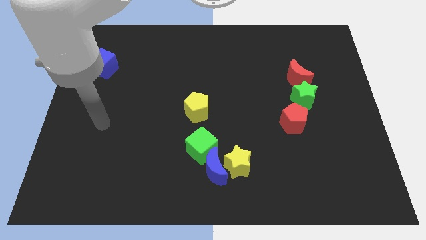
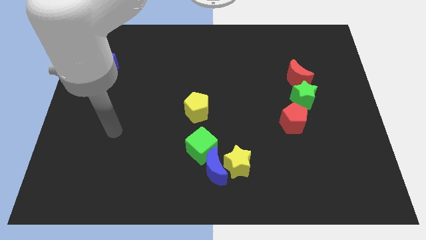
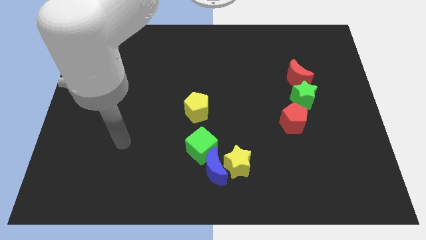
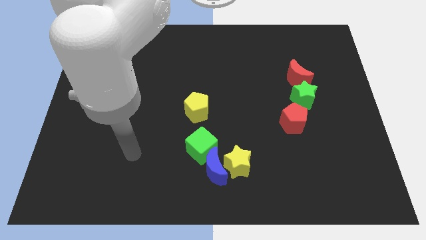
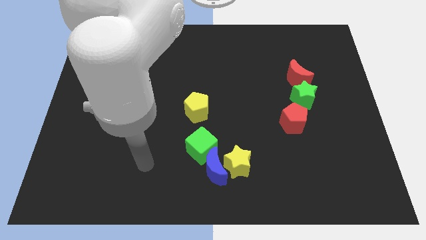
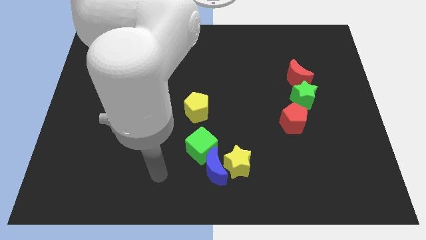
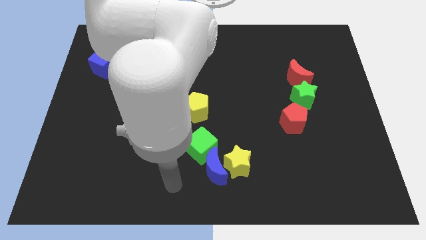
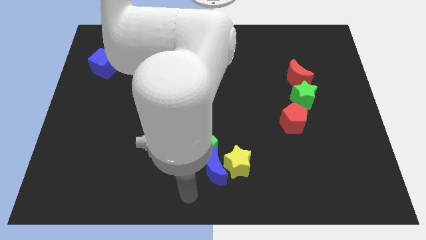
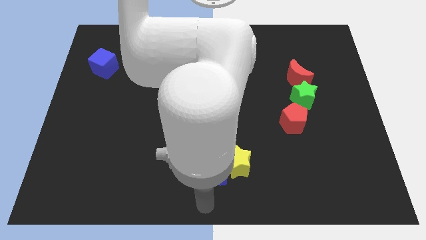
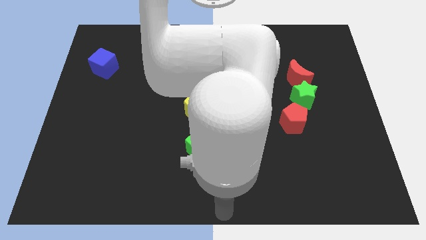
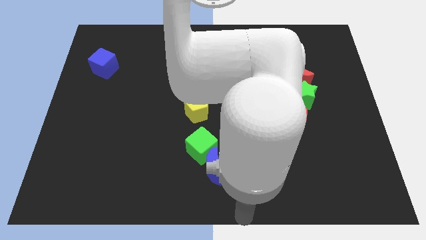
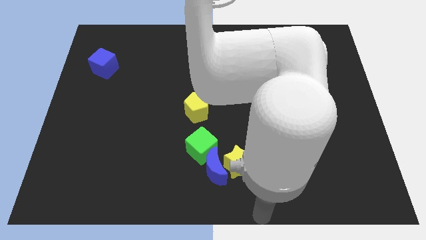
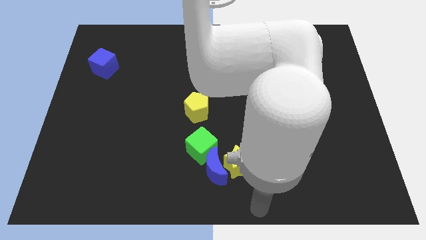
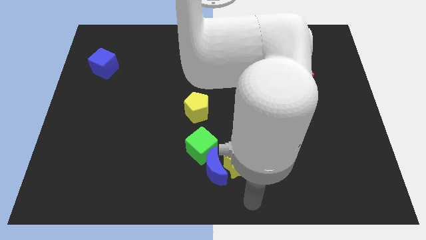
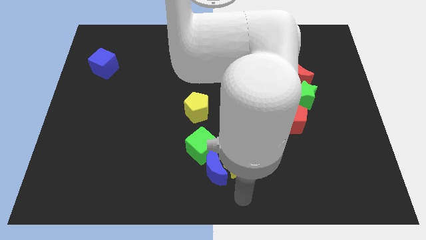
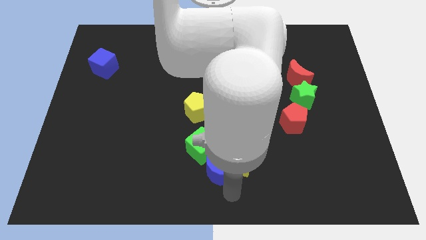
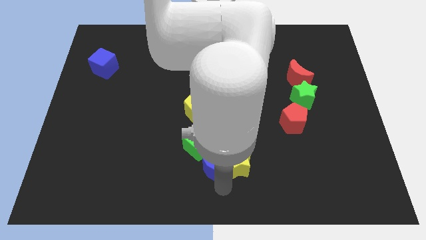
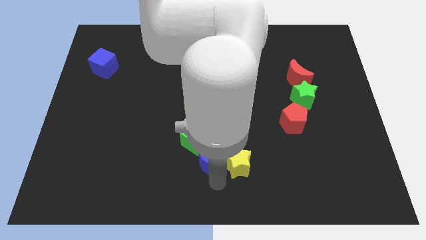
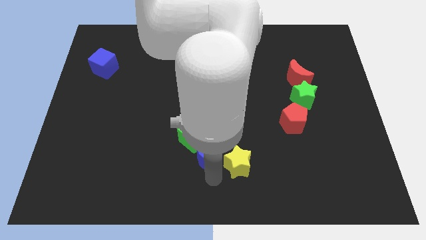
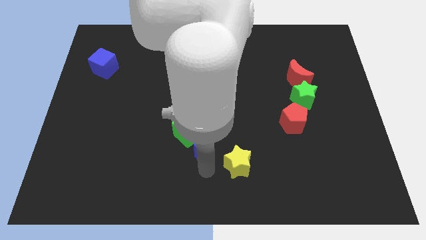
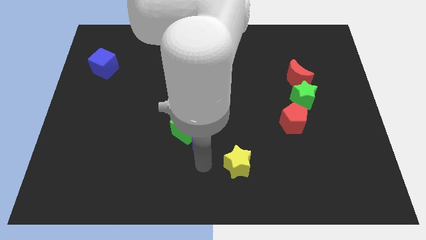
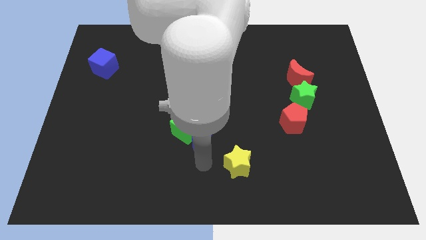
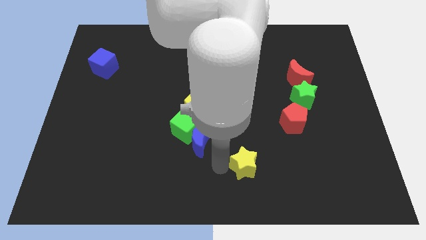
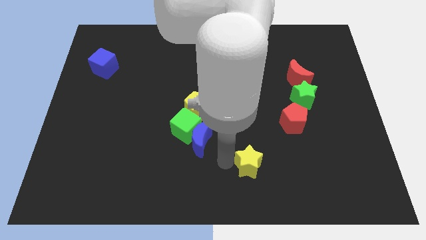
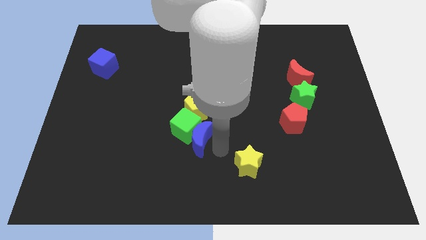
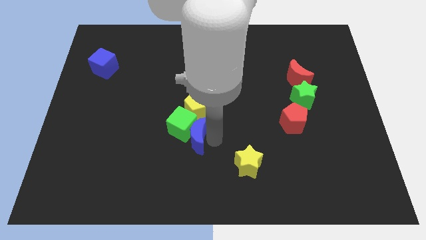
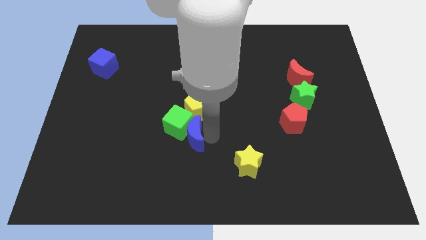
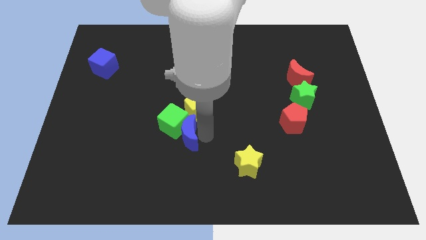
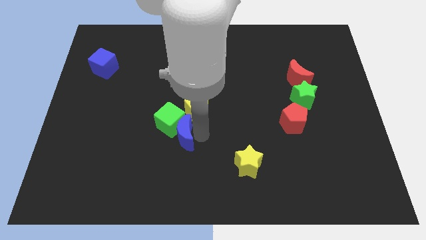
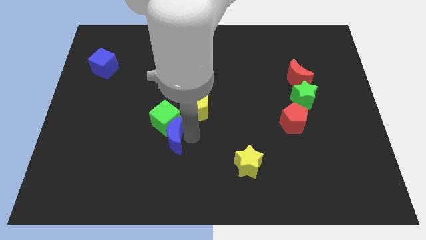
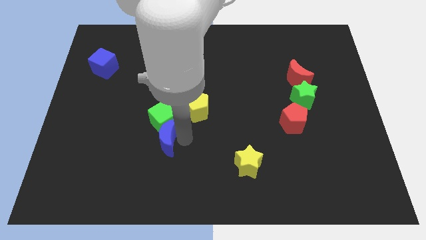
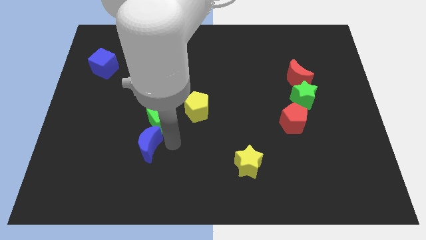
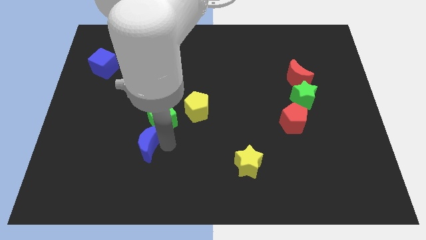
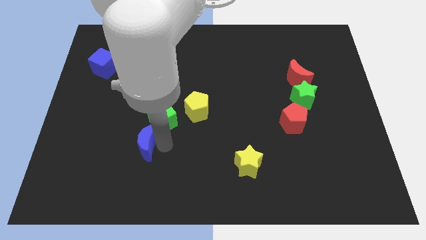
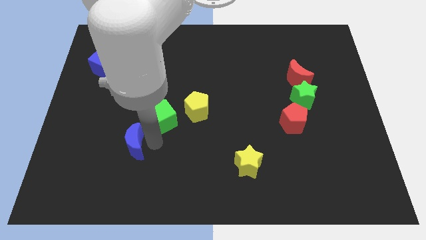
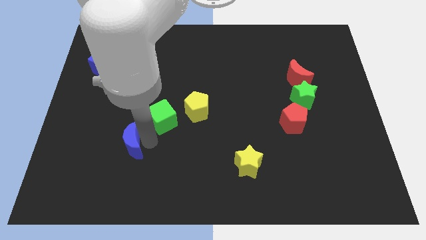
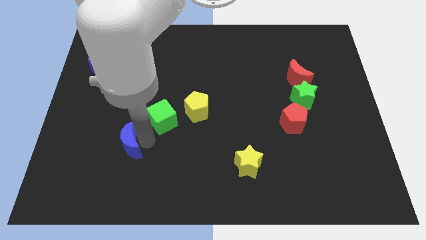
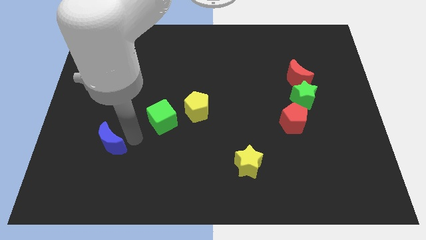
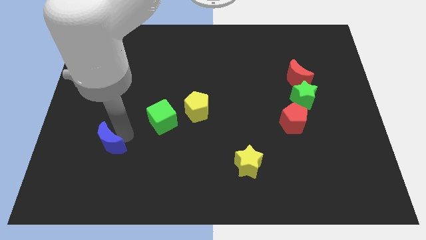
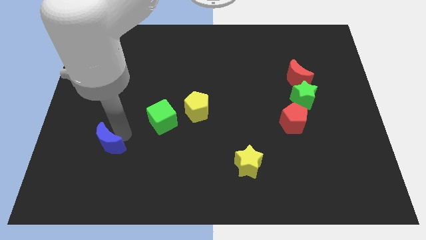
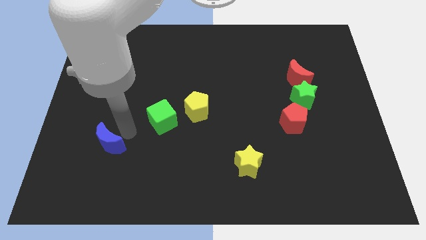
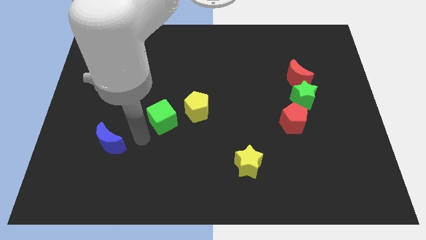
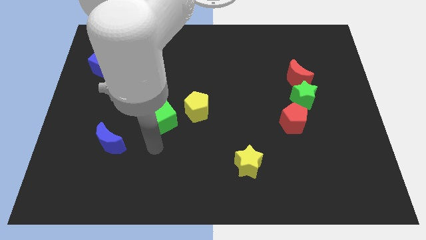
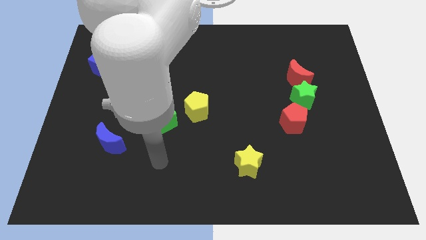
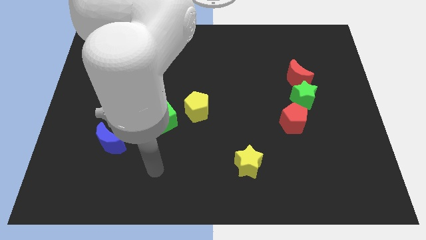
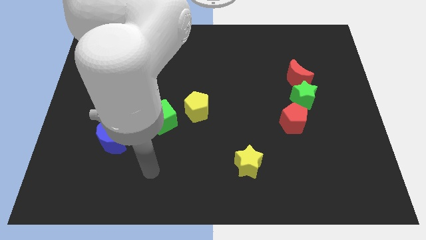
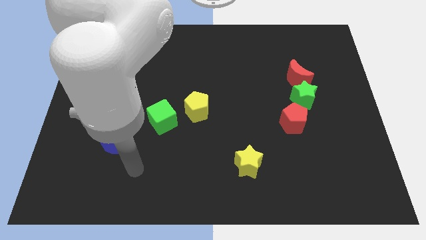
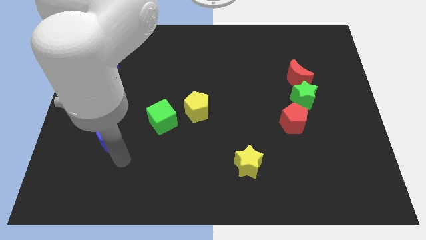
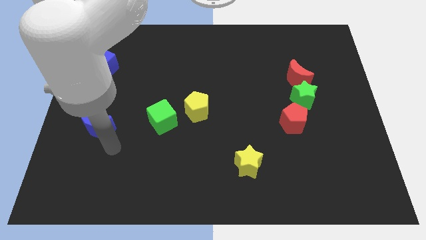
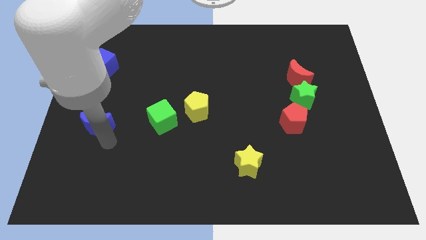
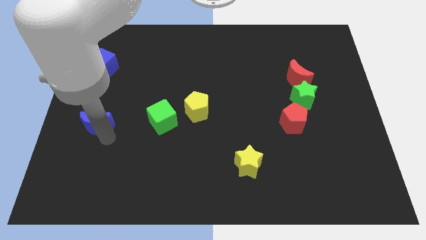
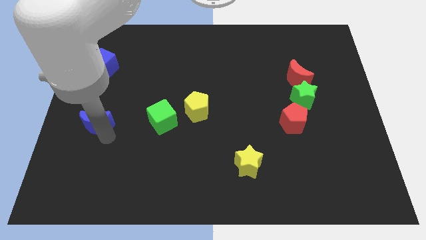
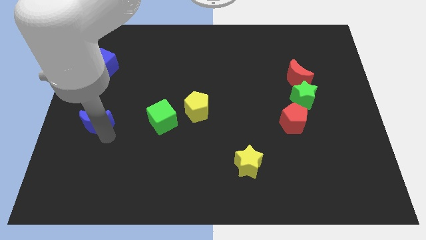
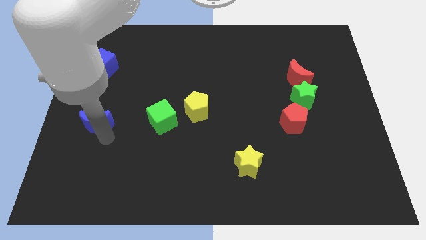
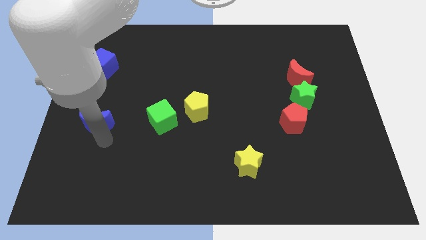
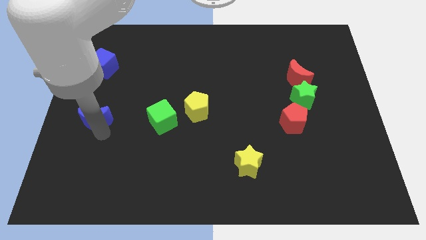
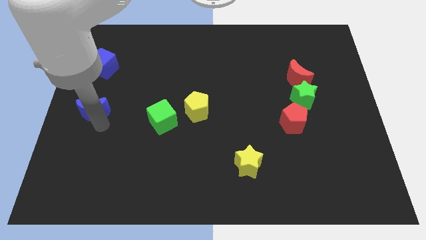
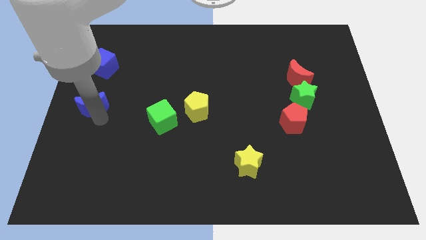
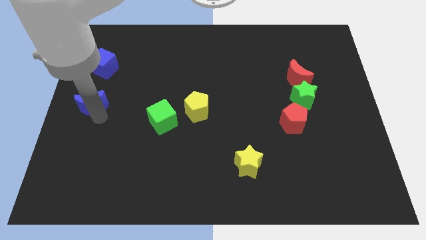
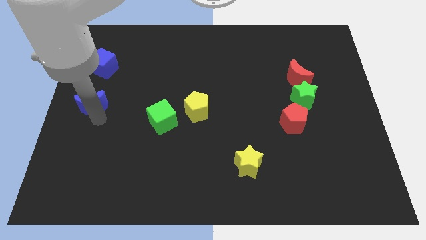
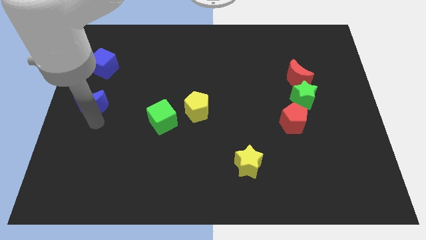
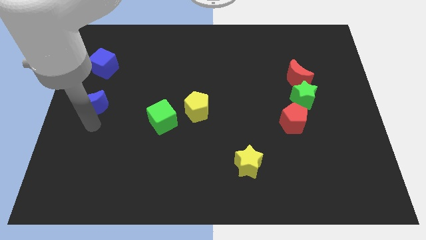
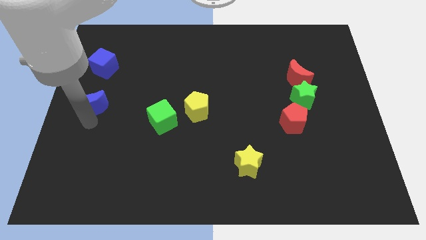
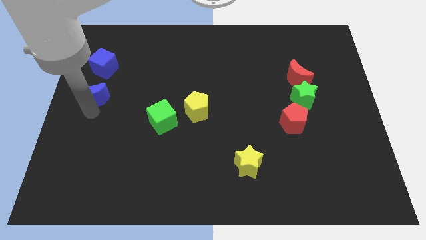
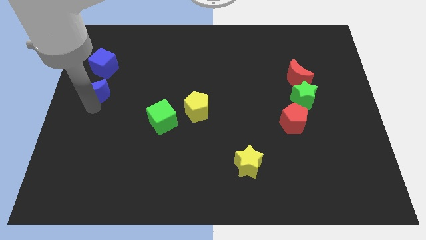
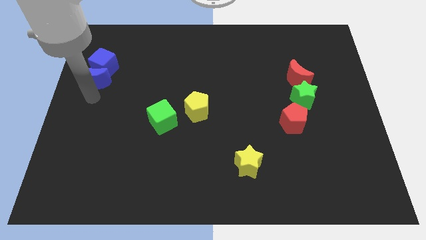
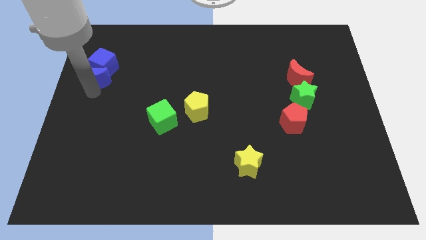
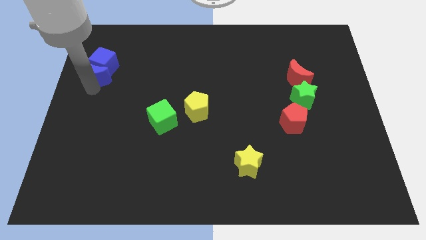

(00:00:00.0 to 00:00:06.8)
move the blue moon into the blue cube

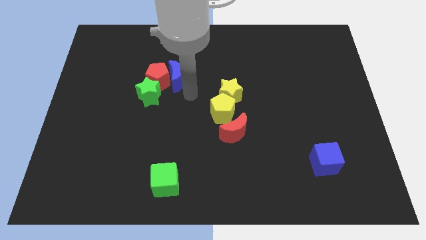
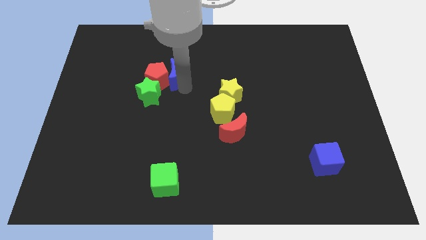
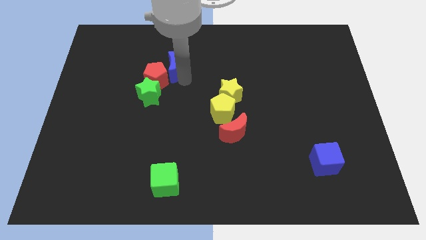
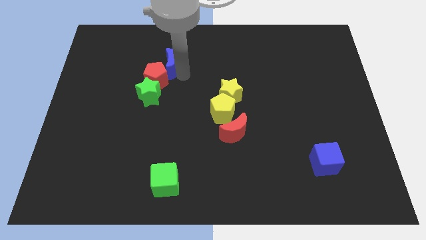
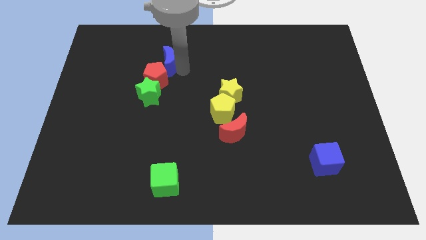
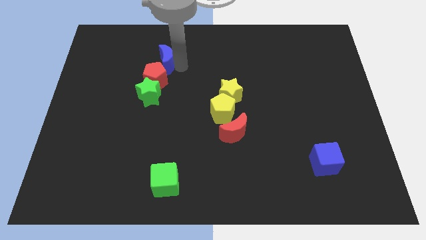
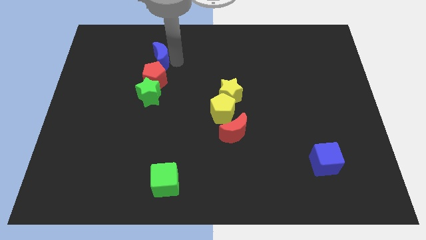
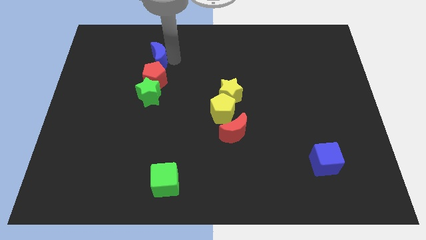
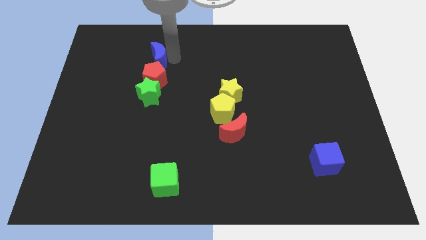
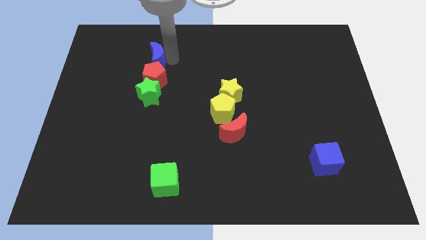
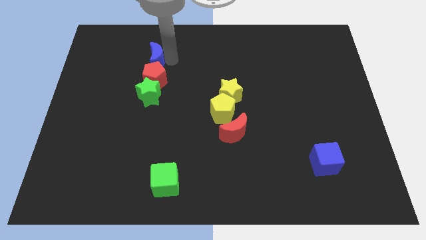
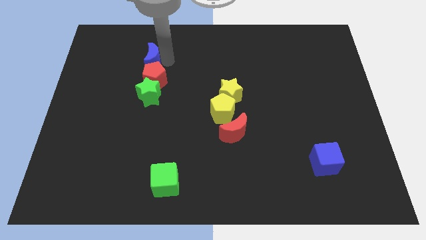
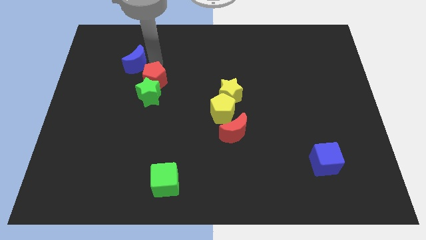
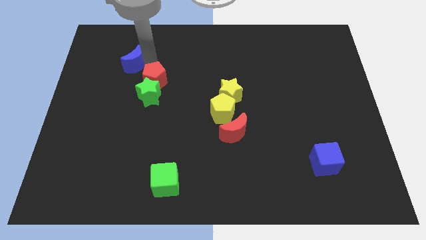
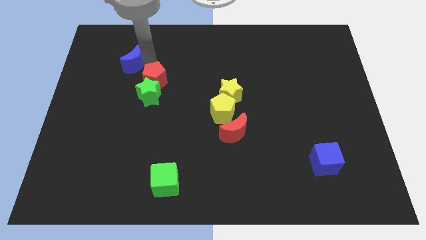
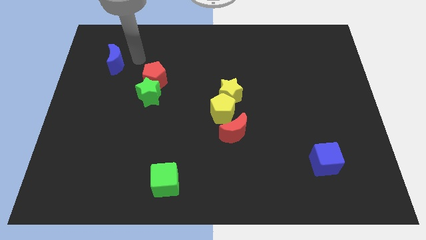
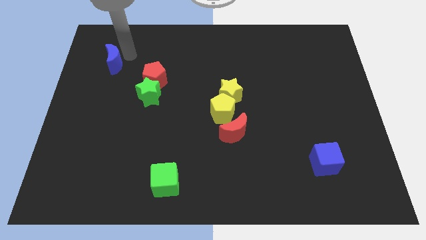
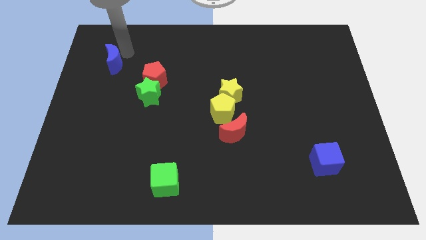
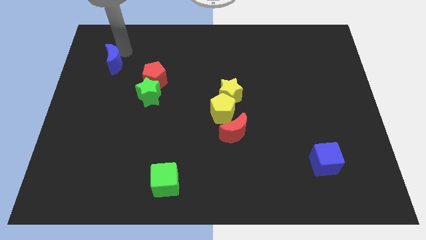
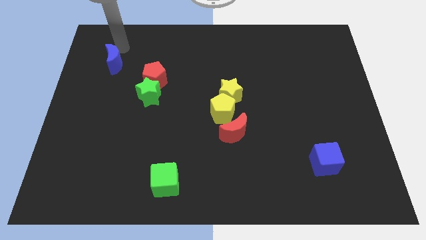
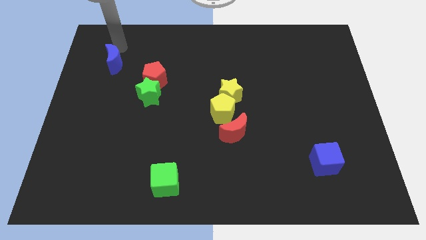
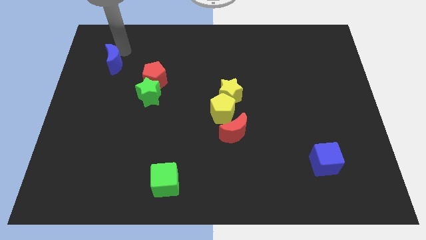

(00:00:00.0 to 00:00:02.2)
slide the blue crescent towards the top left side
